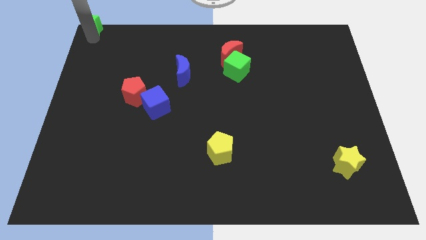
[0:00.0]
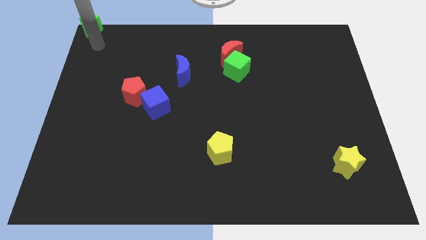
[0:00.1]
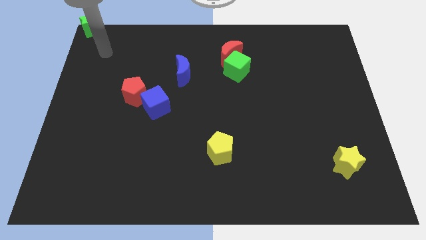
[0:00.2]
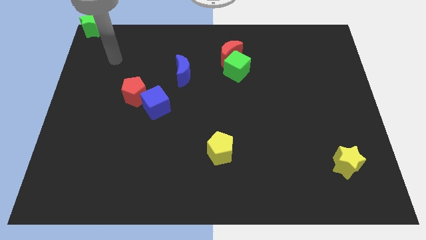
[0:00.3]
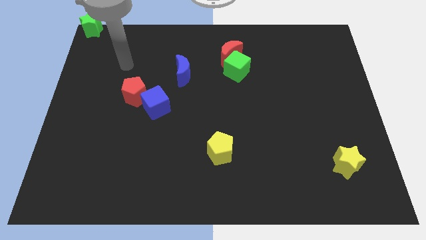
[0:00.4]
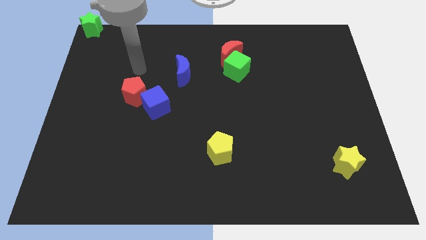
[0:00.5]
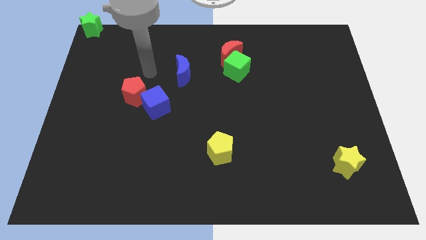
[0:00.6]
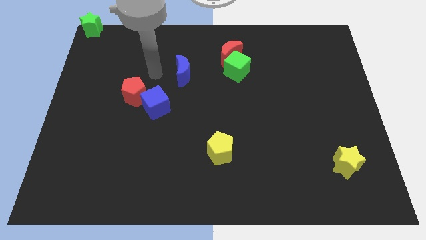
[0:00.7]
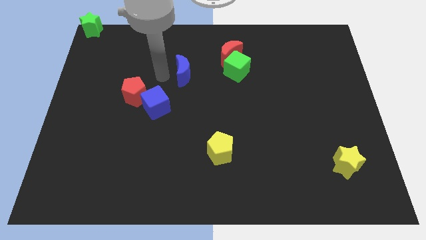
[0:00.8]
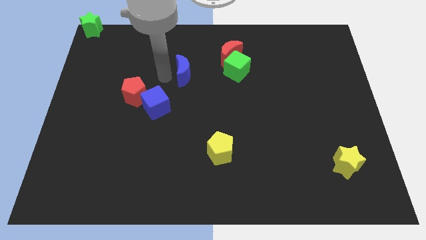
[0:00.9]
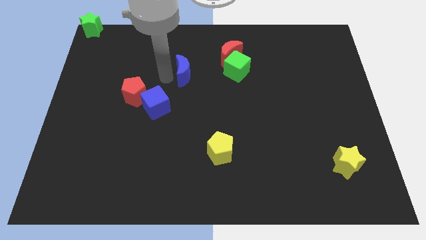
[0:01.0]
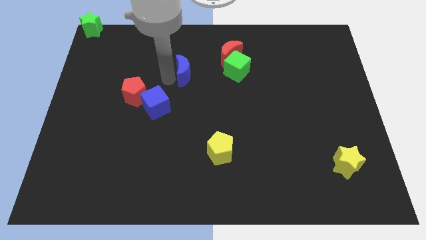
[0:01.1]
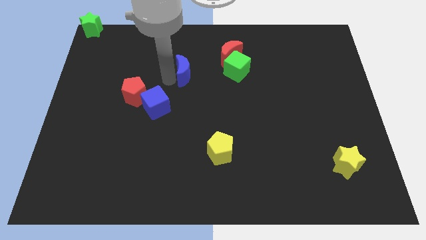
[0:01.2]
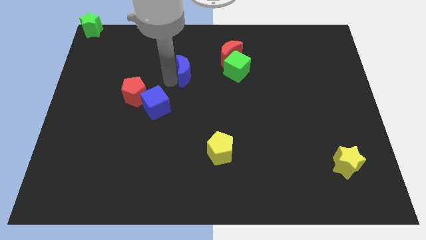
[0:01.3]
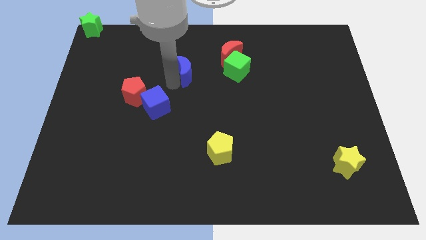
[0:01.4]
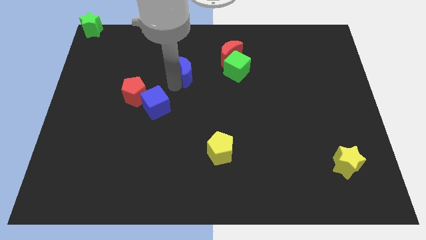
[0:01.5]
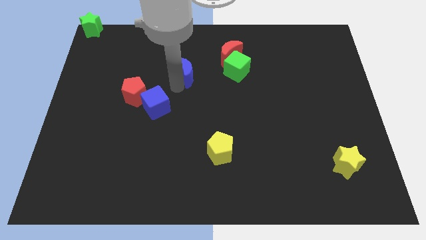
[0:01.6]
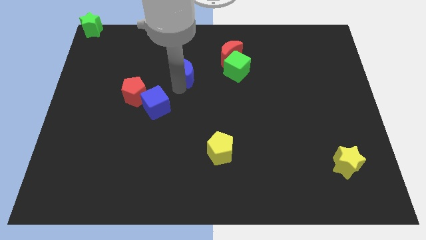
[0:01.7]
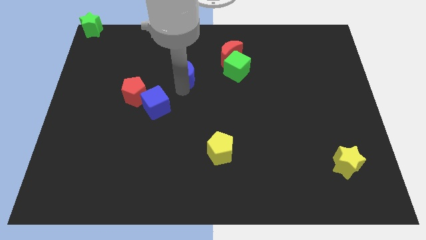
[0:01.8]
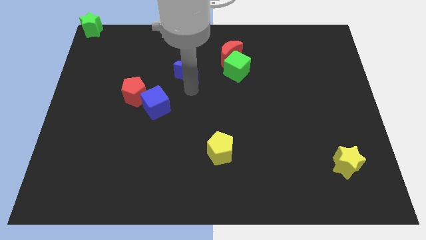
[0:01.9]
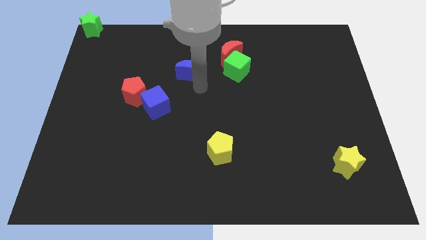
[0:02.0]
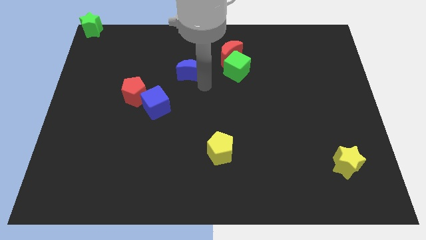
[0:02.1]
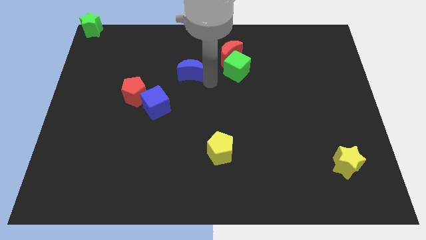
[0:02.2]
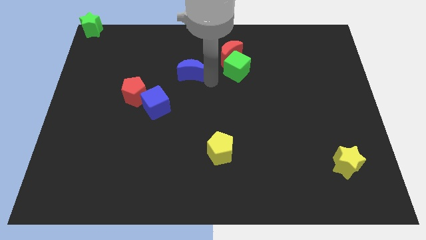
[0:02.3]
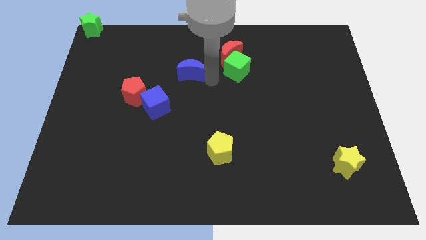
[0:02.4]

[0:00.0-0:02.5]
push the blue crescent slightly to the right

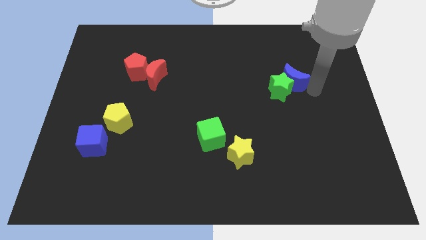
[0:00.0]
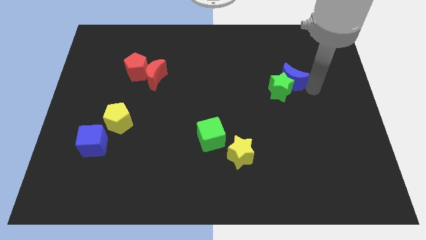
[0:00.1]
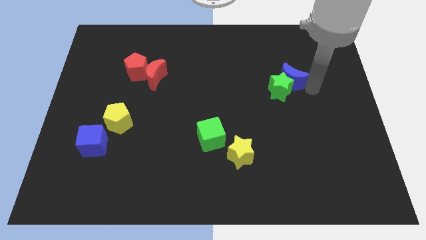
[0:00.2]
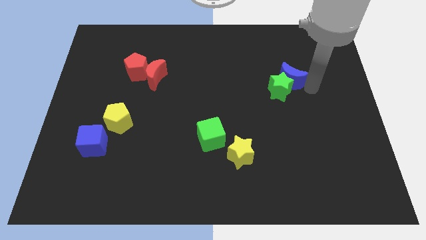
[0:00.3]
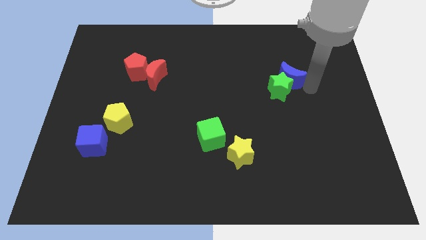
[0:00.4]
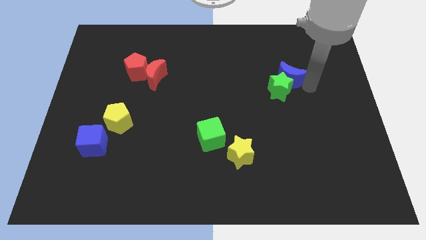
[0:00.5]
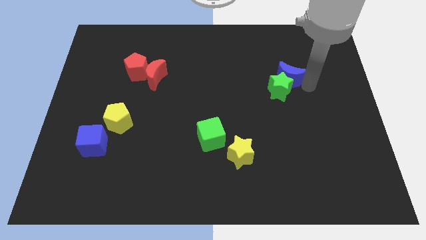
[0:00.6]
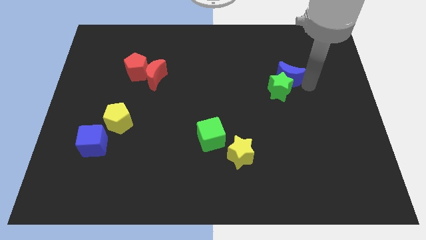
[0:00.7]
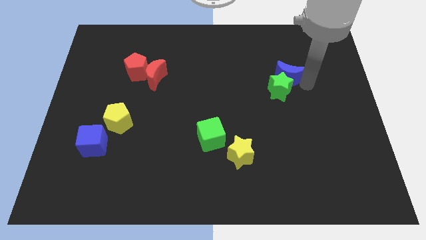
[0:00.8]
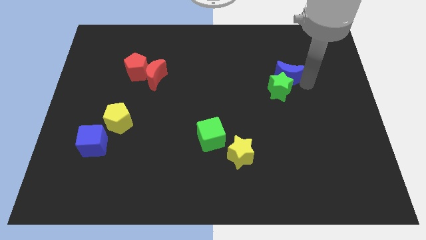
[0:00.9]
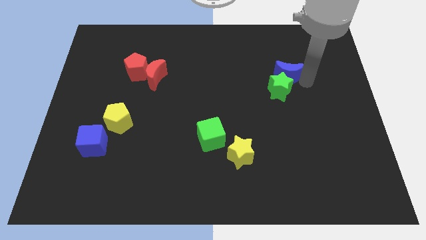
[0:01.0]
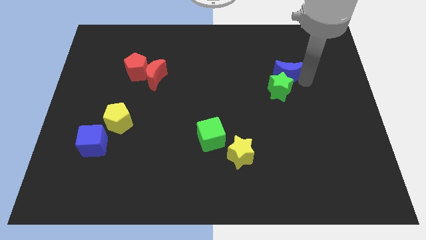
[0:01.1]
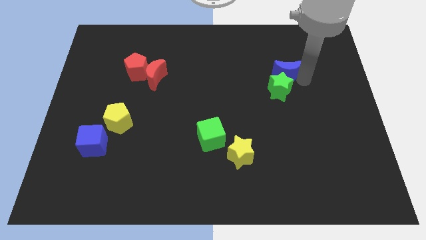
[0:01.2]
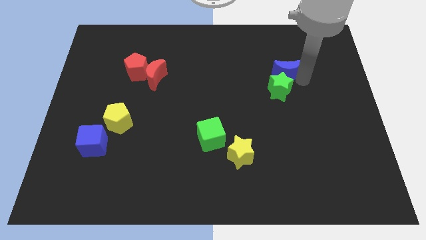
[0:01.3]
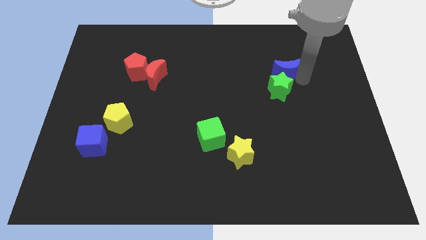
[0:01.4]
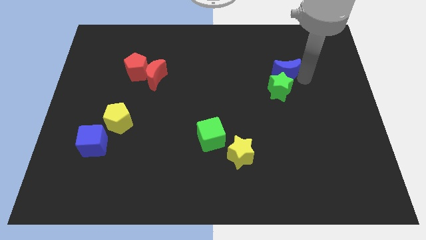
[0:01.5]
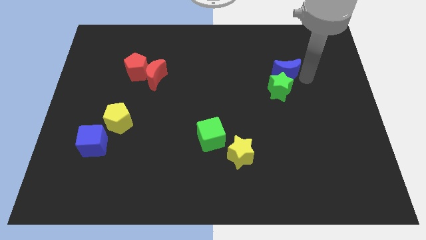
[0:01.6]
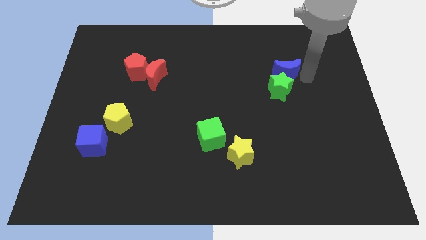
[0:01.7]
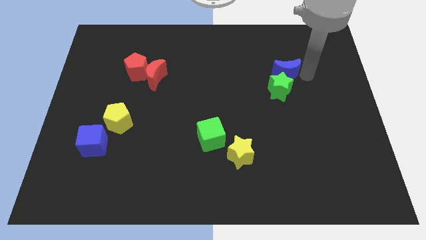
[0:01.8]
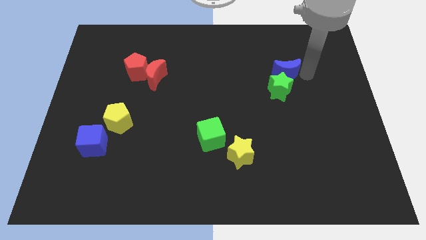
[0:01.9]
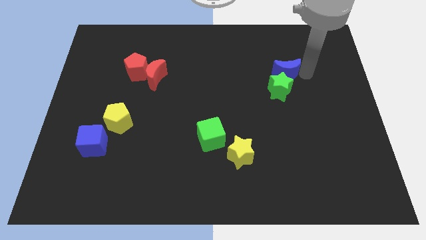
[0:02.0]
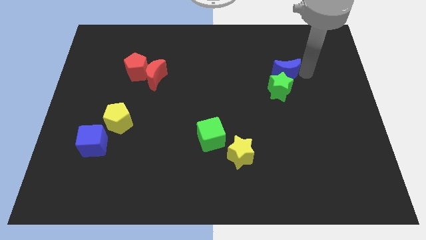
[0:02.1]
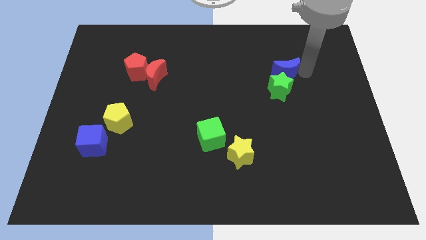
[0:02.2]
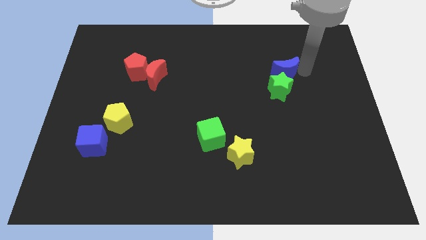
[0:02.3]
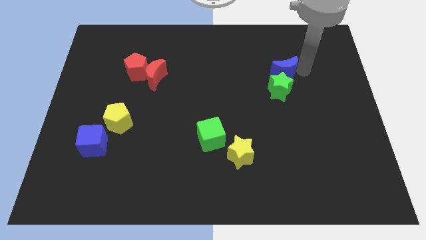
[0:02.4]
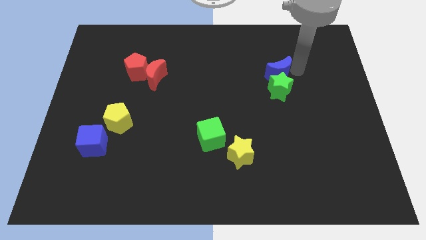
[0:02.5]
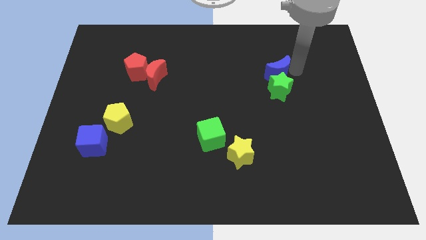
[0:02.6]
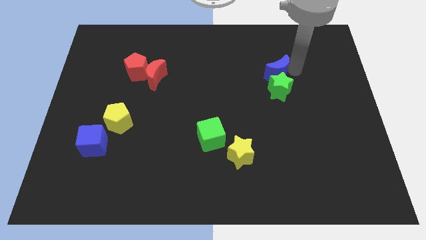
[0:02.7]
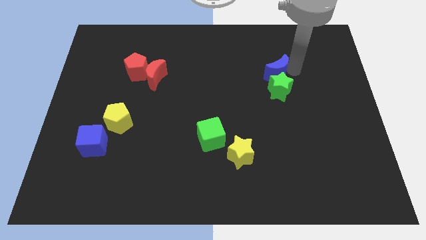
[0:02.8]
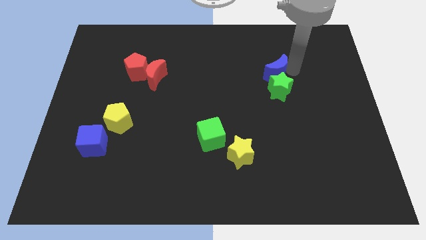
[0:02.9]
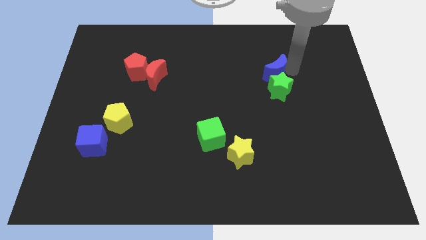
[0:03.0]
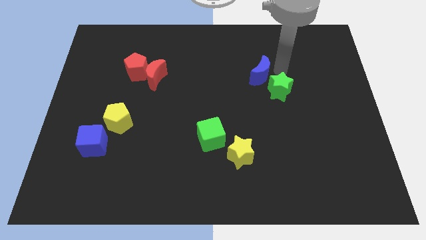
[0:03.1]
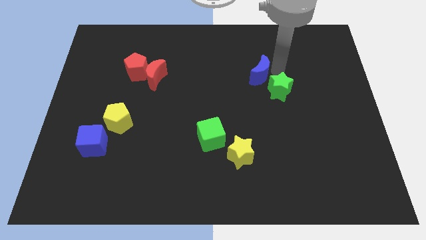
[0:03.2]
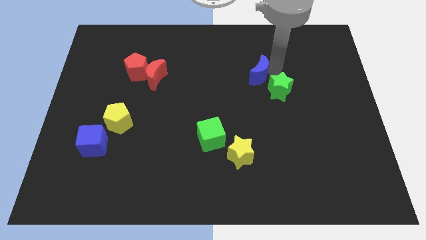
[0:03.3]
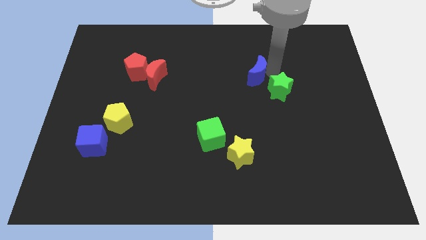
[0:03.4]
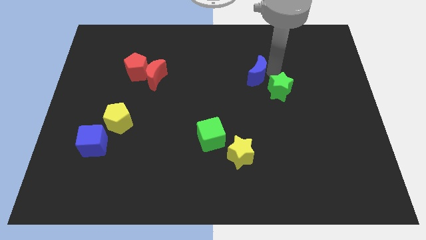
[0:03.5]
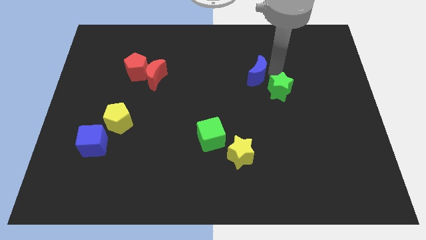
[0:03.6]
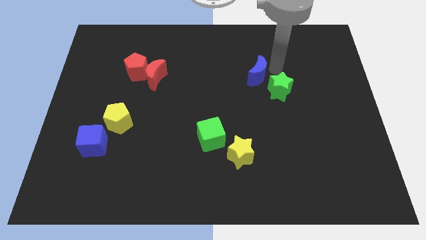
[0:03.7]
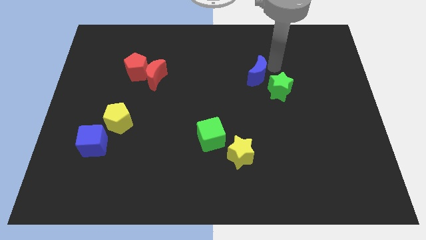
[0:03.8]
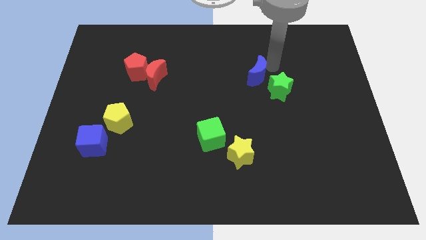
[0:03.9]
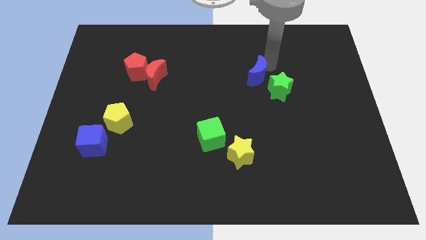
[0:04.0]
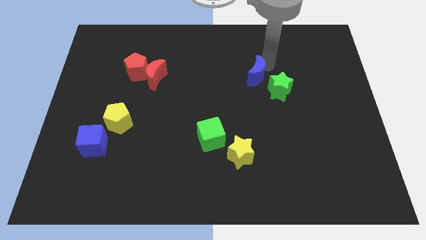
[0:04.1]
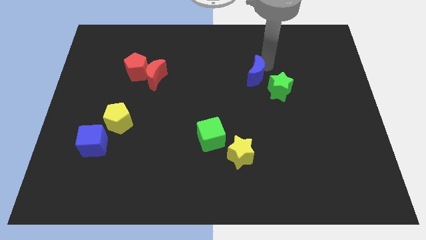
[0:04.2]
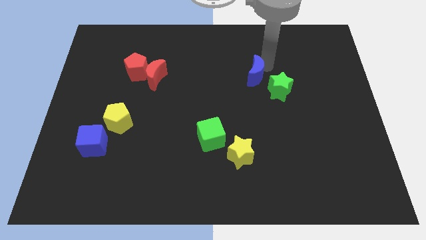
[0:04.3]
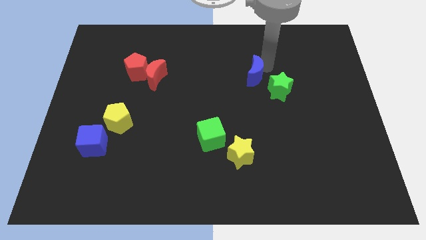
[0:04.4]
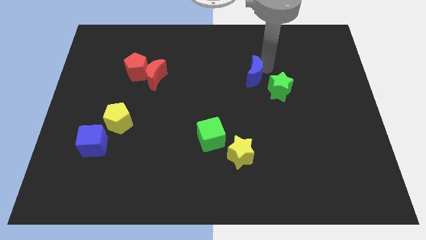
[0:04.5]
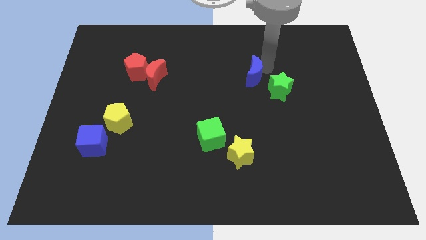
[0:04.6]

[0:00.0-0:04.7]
move blue crescent towards center

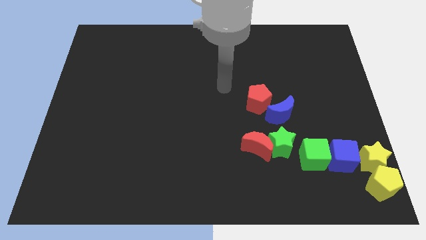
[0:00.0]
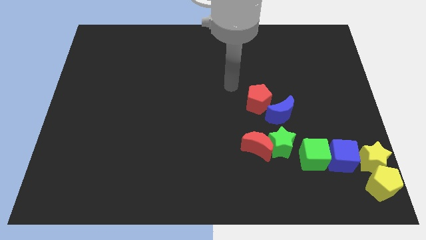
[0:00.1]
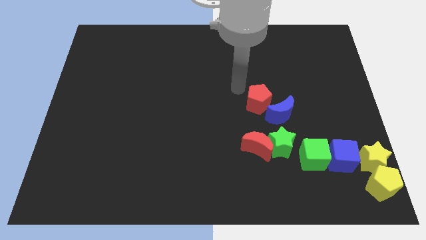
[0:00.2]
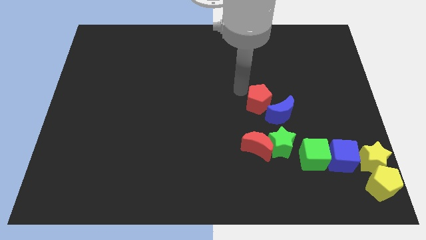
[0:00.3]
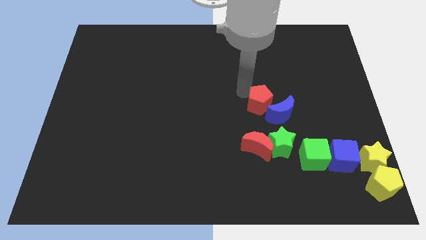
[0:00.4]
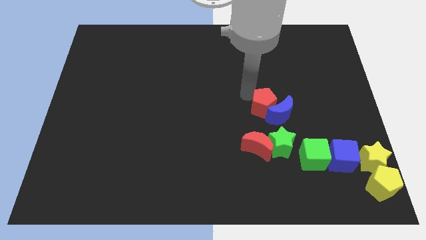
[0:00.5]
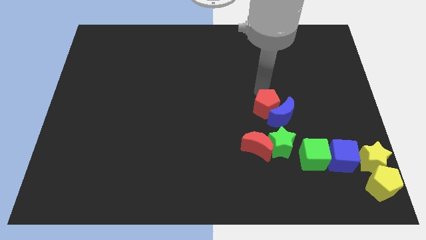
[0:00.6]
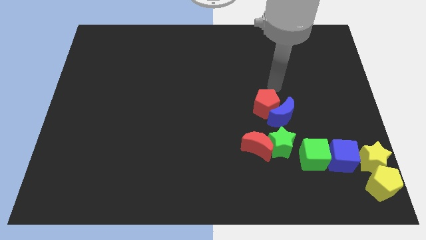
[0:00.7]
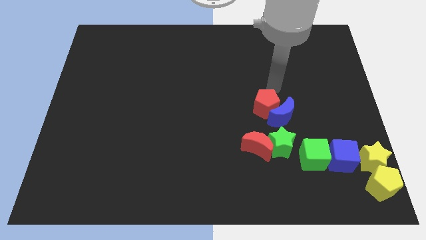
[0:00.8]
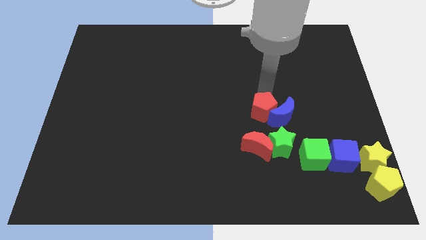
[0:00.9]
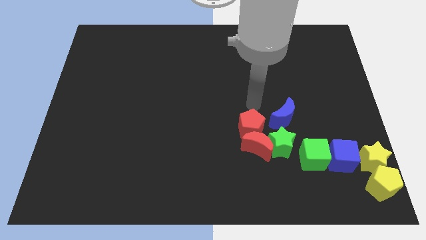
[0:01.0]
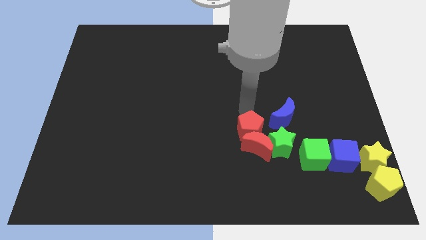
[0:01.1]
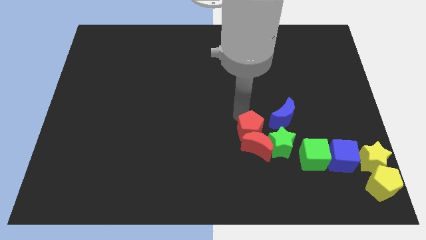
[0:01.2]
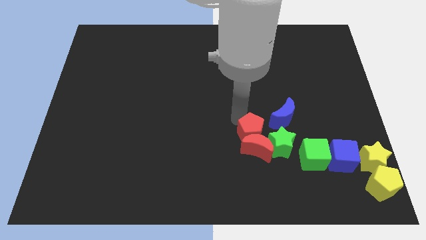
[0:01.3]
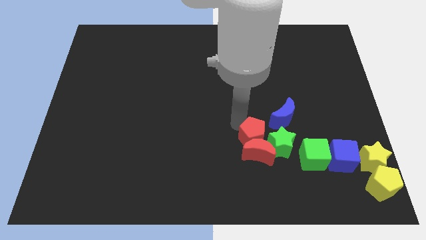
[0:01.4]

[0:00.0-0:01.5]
push the red pentagon into the red moon

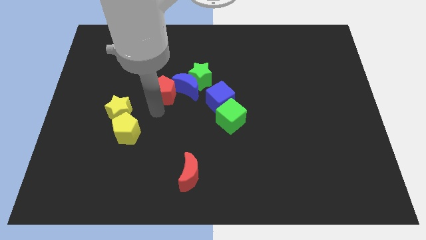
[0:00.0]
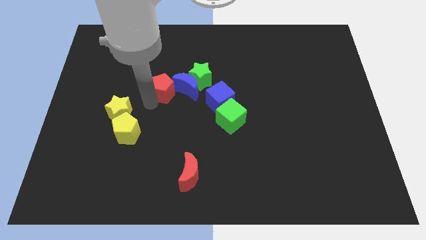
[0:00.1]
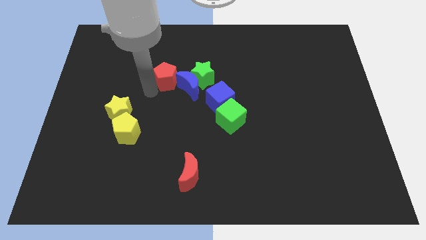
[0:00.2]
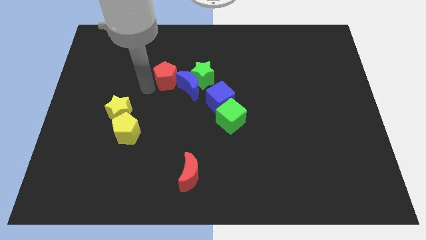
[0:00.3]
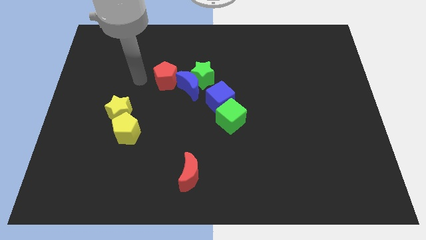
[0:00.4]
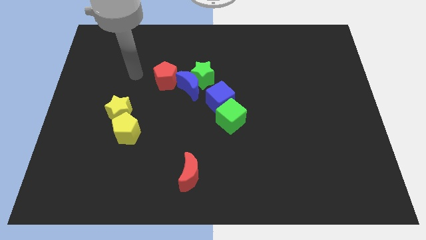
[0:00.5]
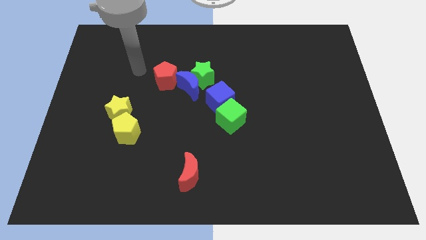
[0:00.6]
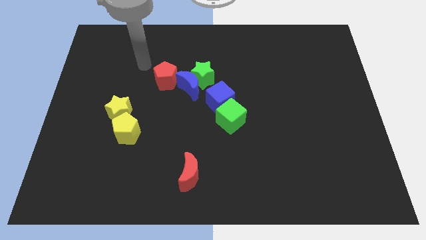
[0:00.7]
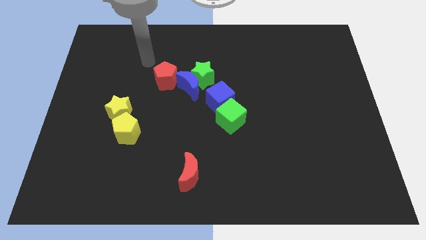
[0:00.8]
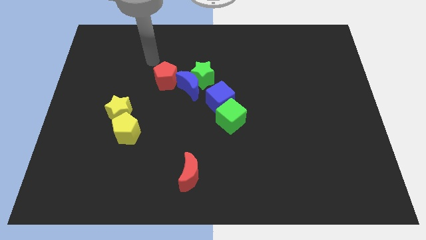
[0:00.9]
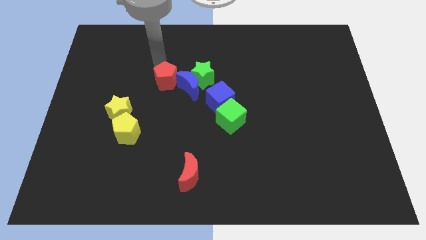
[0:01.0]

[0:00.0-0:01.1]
place your arm above the red pentagon
